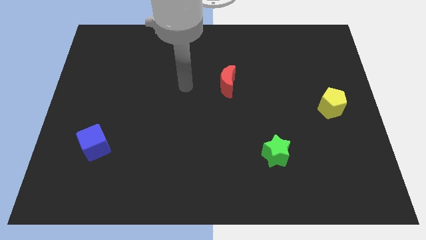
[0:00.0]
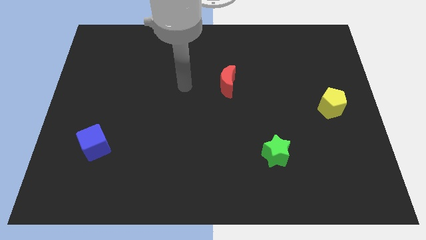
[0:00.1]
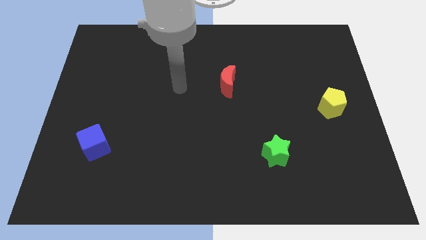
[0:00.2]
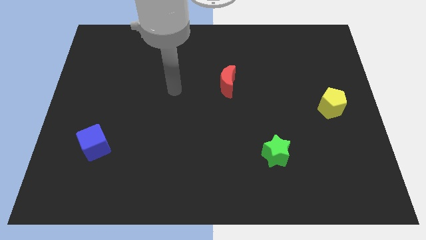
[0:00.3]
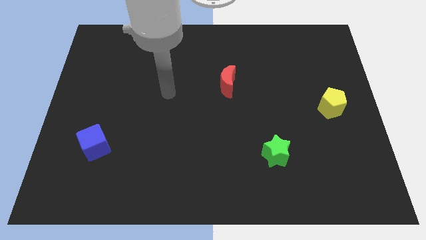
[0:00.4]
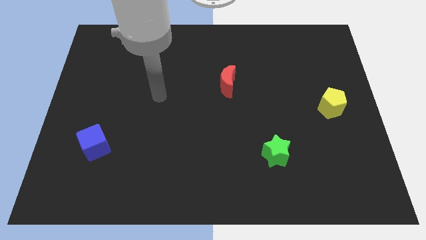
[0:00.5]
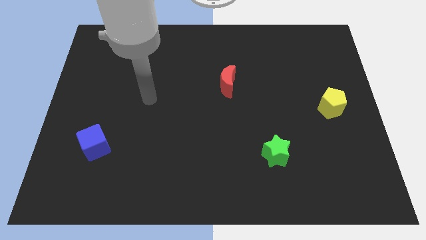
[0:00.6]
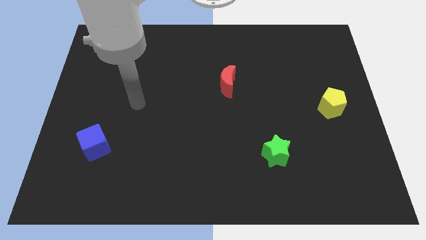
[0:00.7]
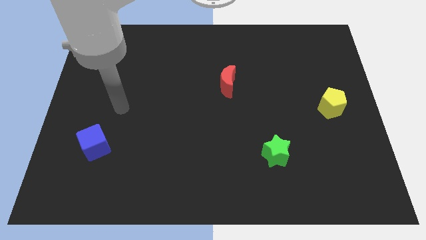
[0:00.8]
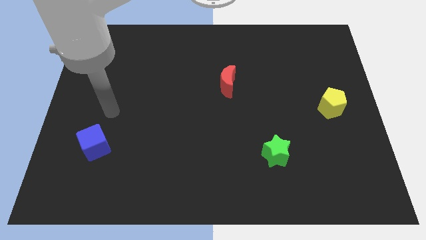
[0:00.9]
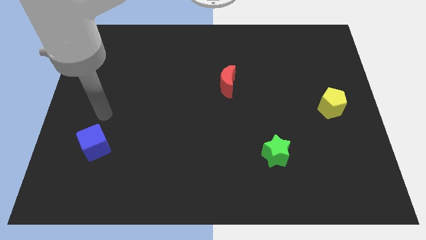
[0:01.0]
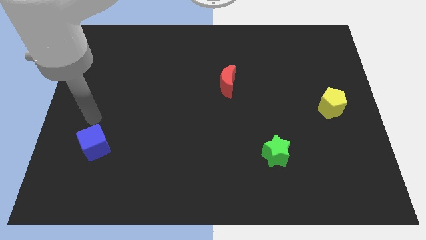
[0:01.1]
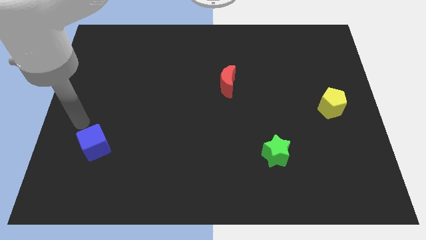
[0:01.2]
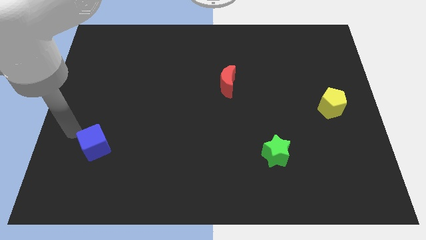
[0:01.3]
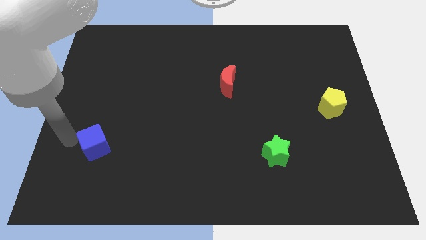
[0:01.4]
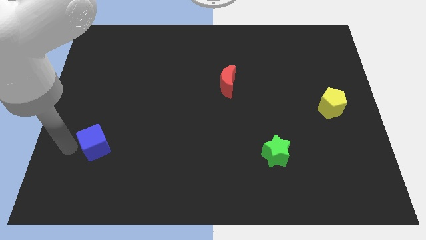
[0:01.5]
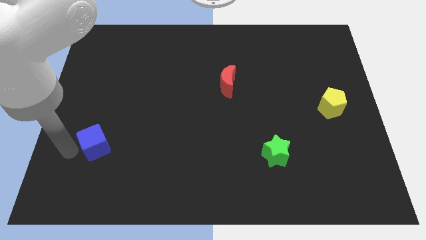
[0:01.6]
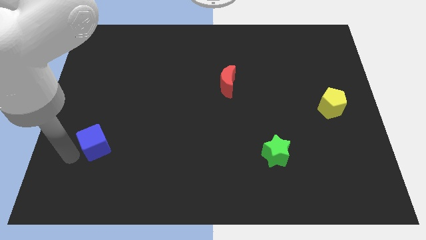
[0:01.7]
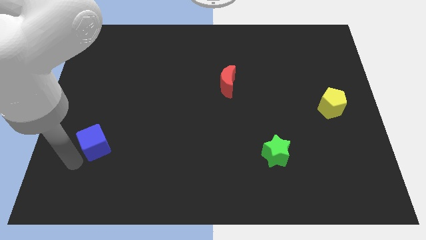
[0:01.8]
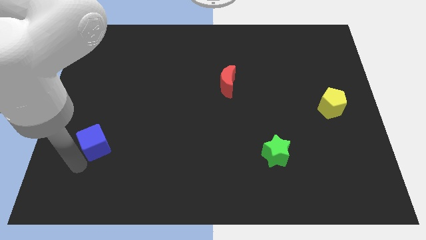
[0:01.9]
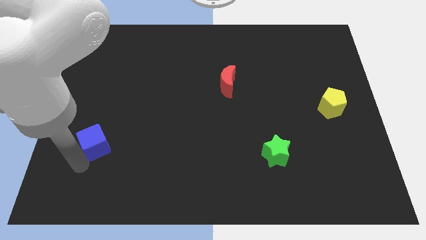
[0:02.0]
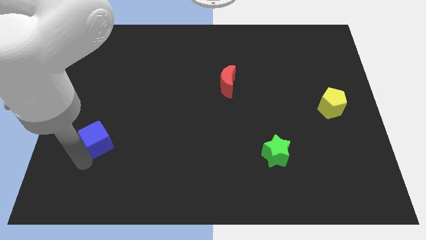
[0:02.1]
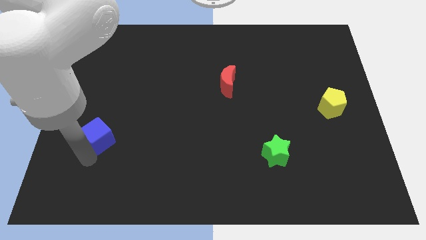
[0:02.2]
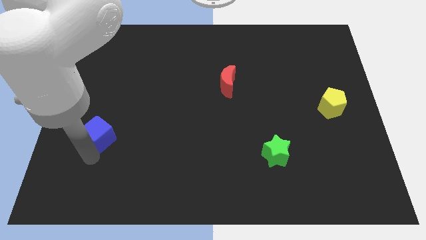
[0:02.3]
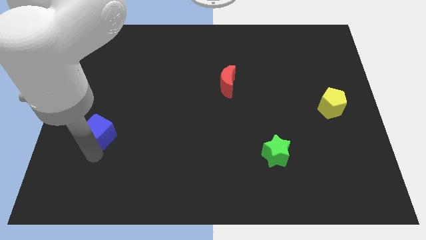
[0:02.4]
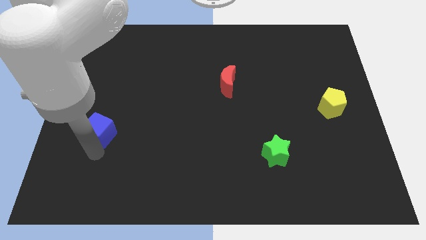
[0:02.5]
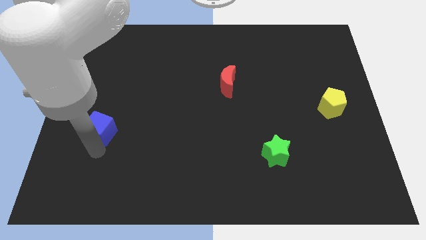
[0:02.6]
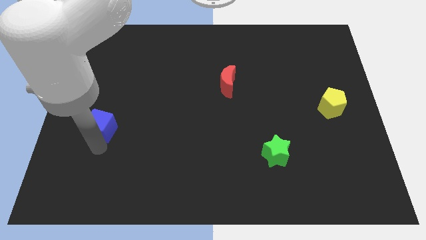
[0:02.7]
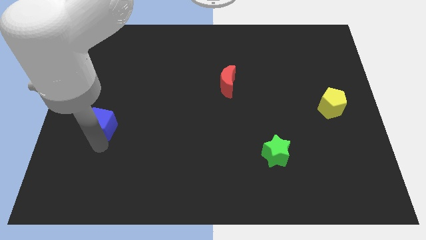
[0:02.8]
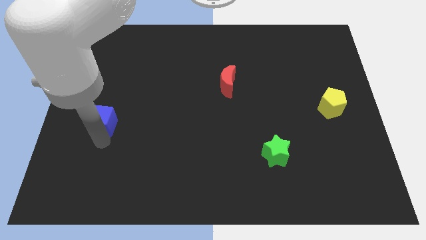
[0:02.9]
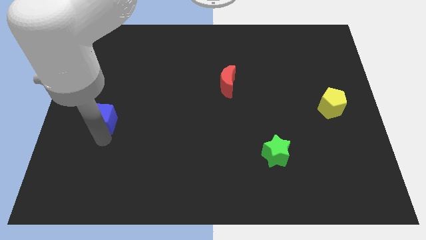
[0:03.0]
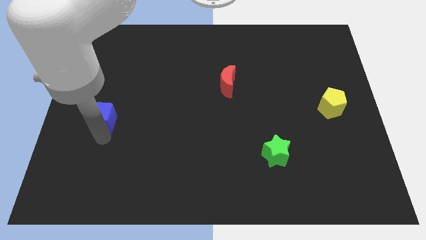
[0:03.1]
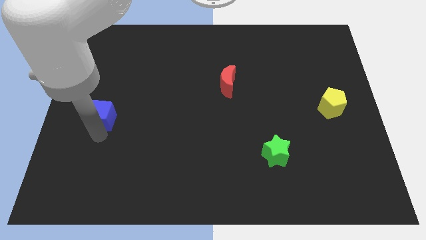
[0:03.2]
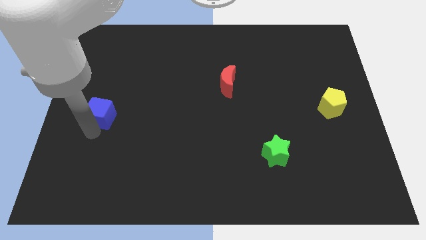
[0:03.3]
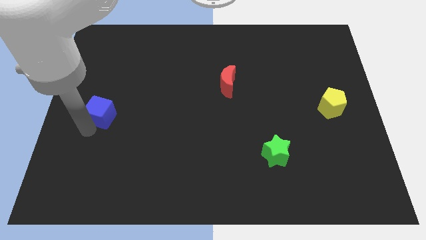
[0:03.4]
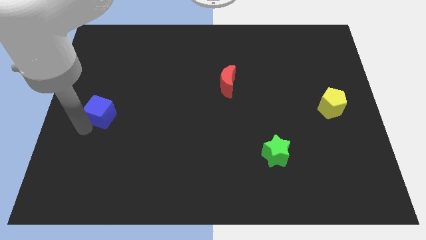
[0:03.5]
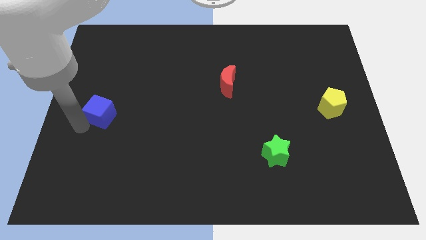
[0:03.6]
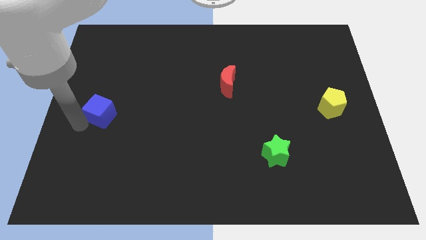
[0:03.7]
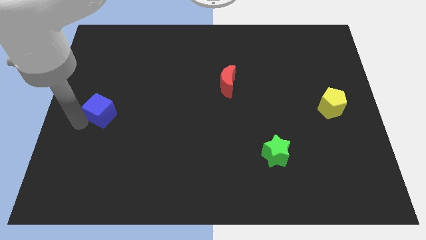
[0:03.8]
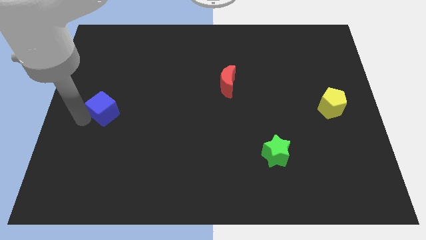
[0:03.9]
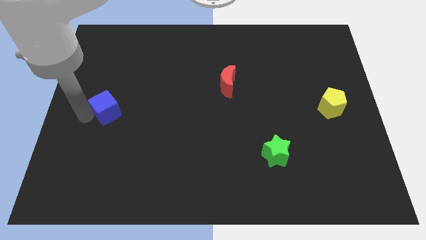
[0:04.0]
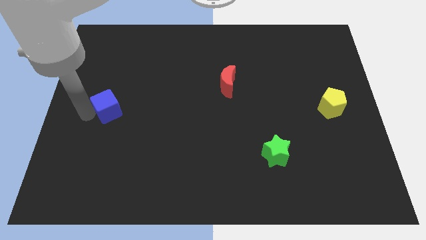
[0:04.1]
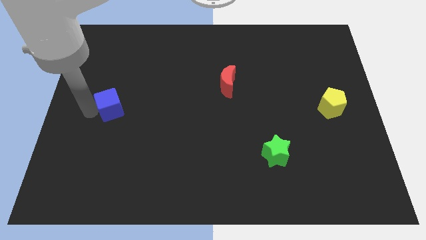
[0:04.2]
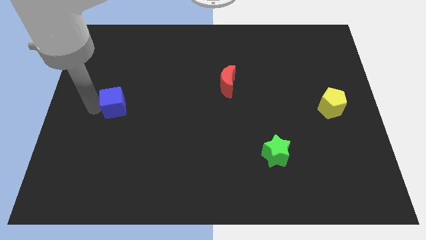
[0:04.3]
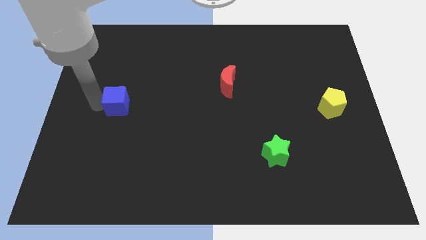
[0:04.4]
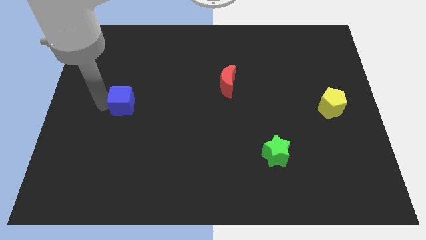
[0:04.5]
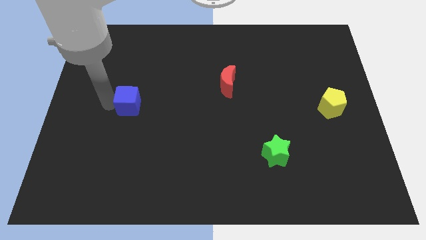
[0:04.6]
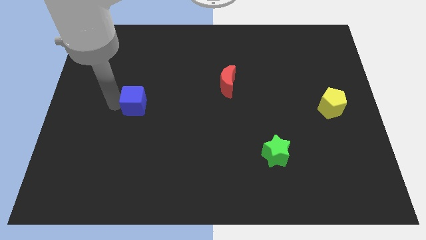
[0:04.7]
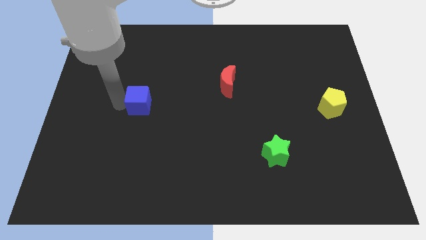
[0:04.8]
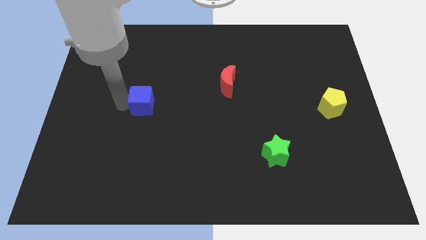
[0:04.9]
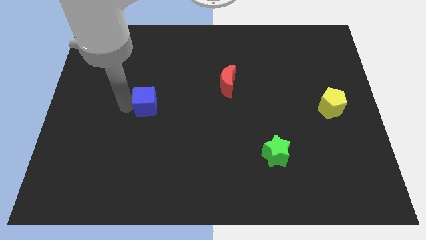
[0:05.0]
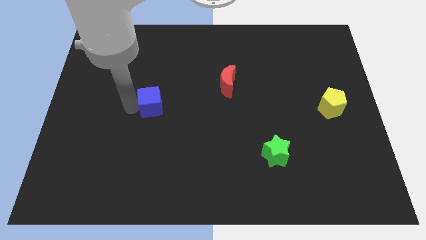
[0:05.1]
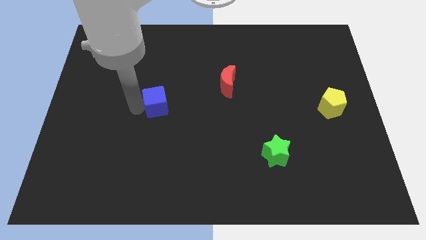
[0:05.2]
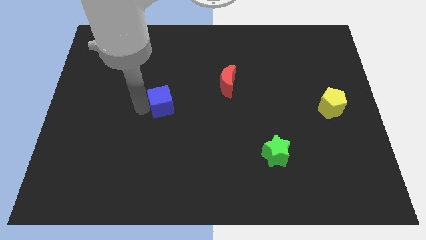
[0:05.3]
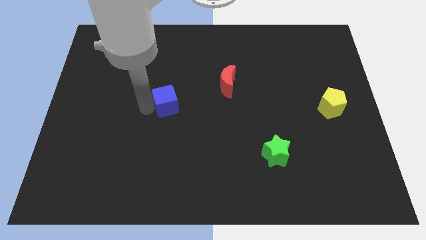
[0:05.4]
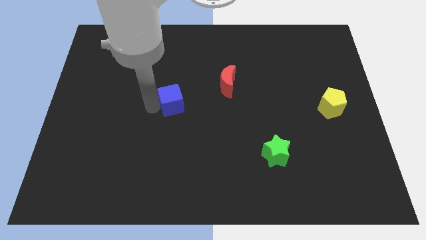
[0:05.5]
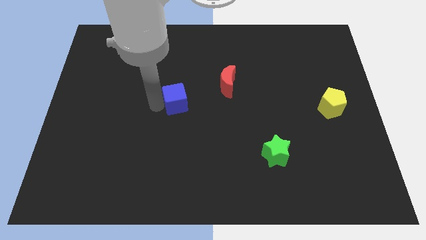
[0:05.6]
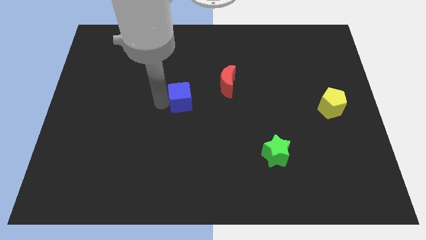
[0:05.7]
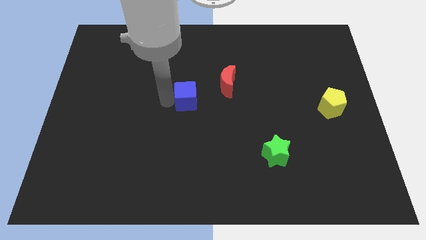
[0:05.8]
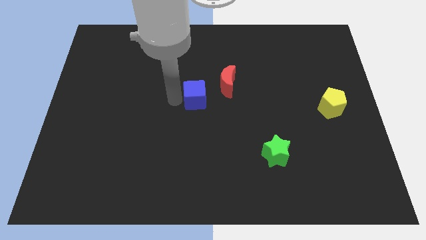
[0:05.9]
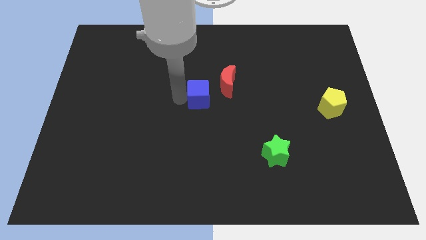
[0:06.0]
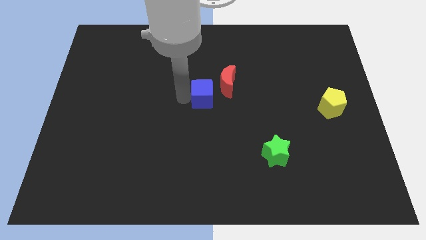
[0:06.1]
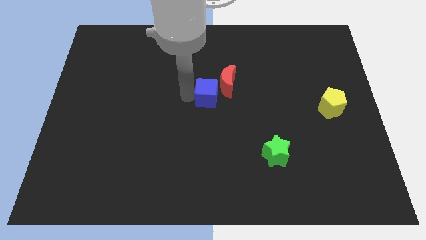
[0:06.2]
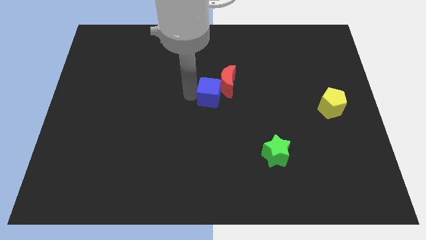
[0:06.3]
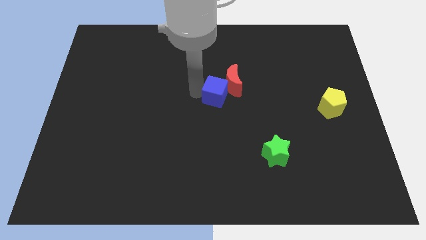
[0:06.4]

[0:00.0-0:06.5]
push the cube towards the red moon

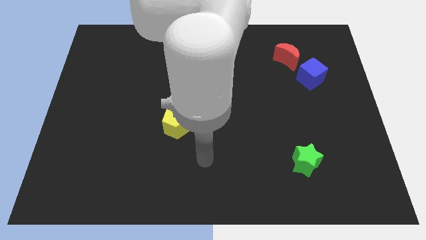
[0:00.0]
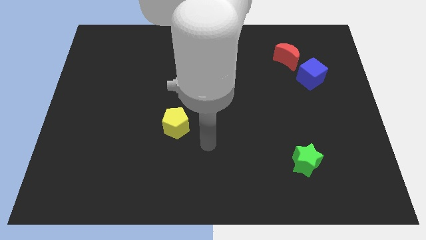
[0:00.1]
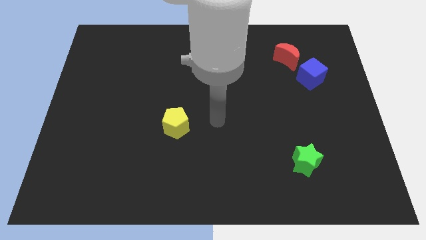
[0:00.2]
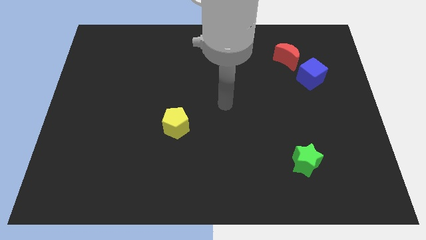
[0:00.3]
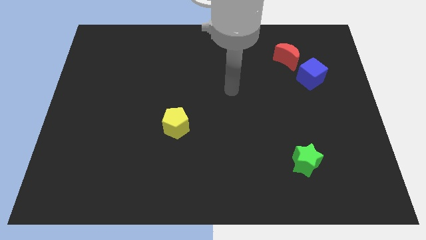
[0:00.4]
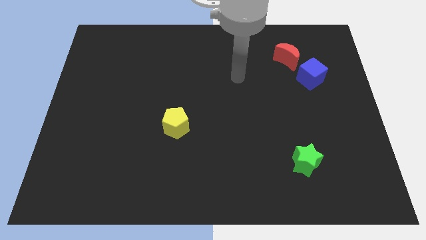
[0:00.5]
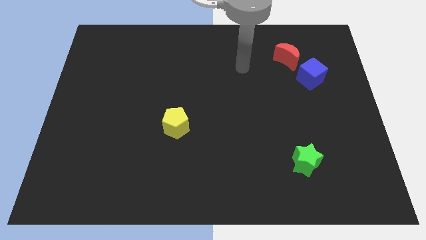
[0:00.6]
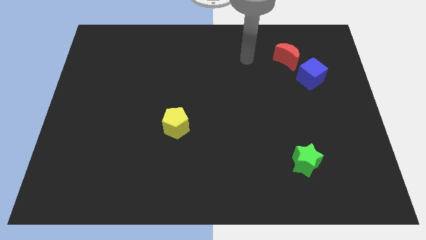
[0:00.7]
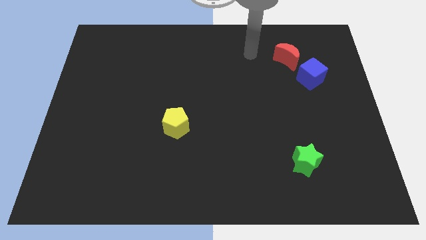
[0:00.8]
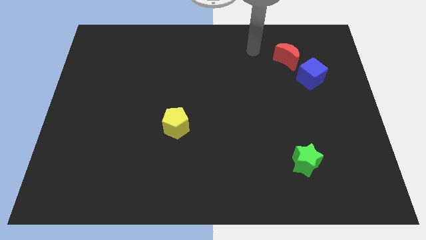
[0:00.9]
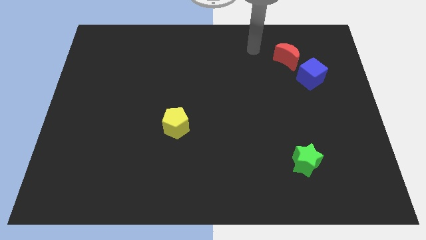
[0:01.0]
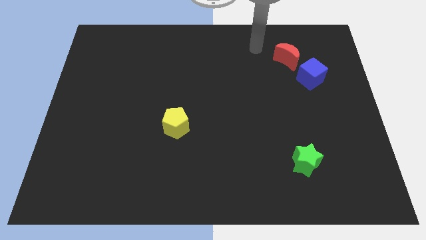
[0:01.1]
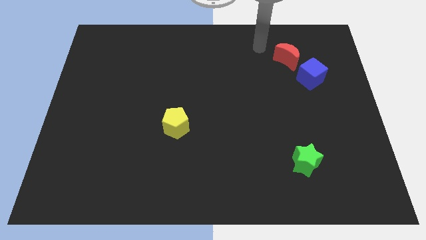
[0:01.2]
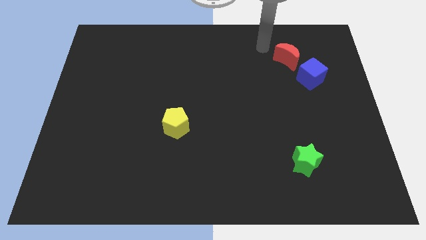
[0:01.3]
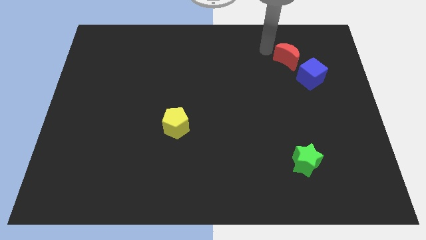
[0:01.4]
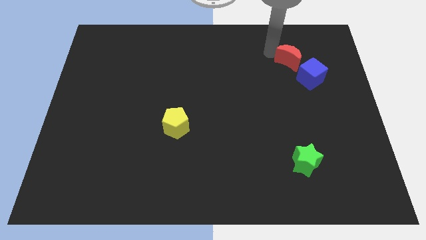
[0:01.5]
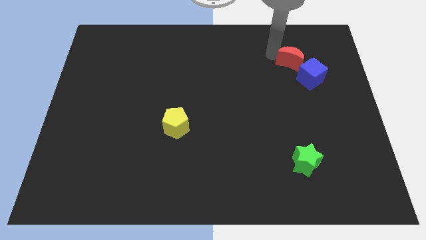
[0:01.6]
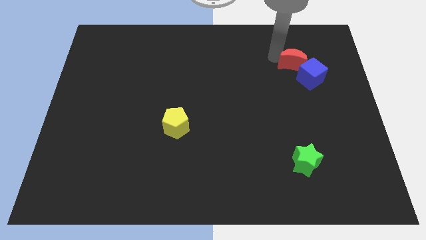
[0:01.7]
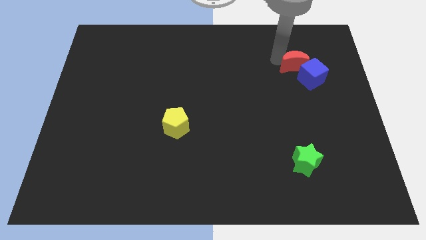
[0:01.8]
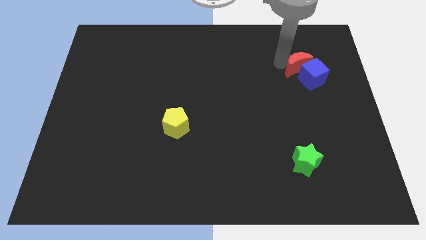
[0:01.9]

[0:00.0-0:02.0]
push the red block next to the blue block
